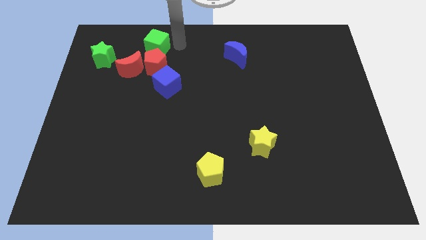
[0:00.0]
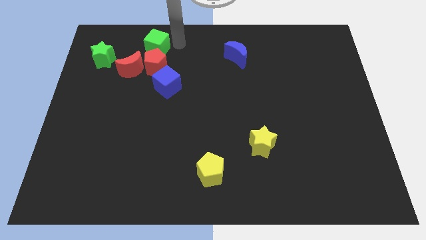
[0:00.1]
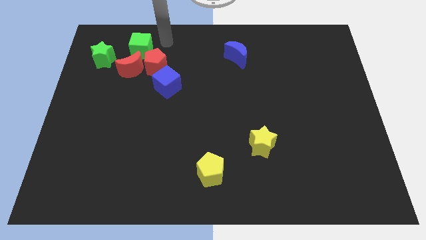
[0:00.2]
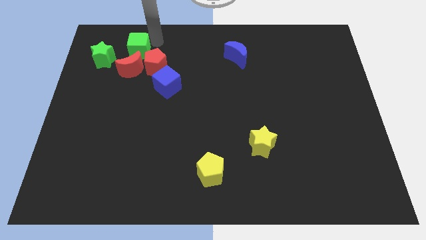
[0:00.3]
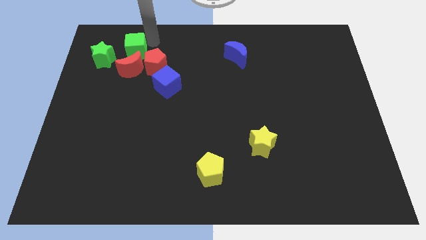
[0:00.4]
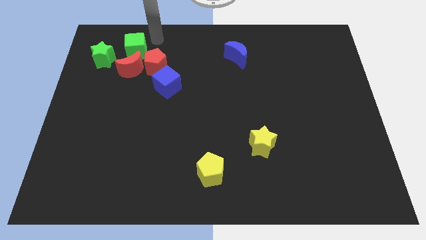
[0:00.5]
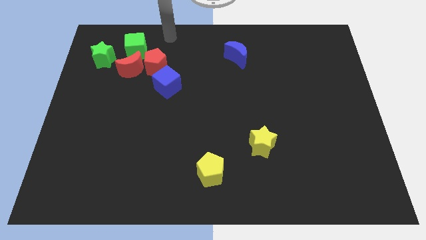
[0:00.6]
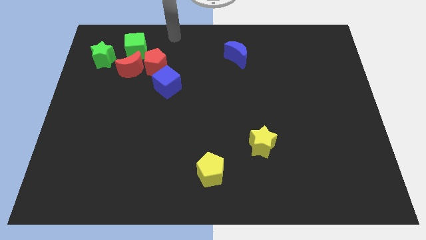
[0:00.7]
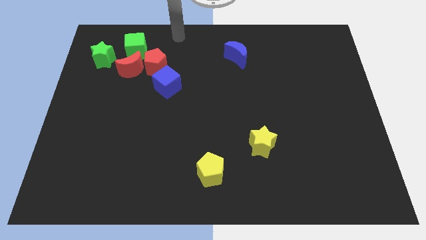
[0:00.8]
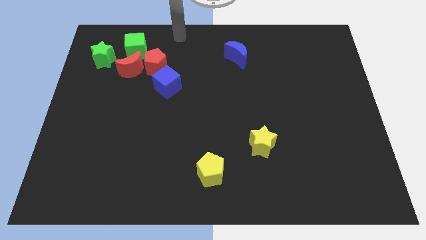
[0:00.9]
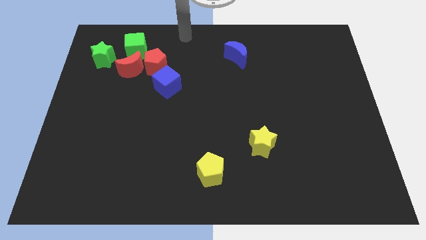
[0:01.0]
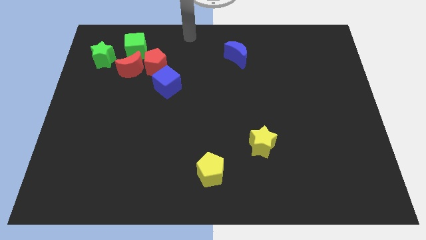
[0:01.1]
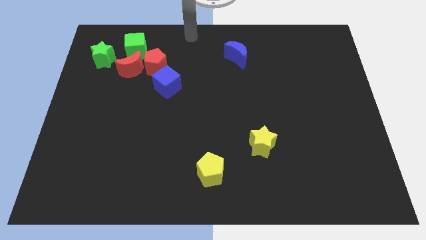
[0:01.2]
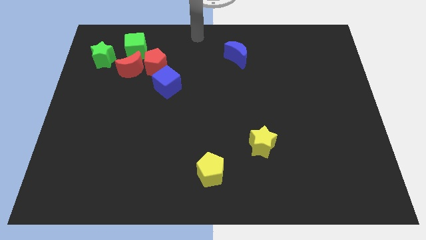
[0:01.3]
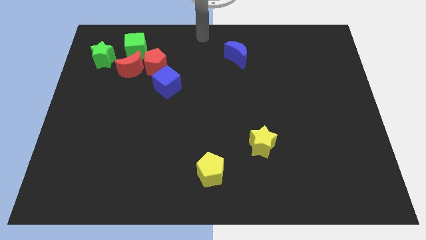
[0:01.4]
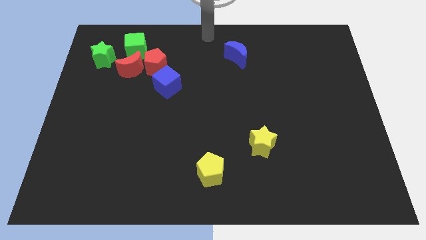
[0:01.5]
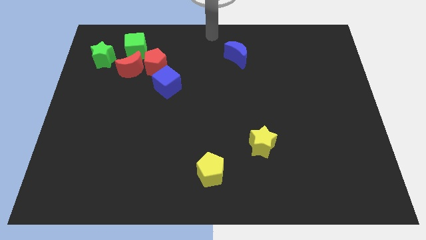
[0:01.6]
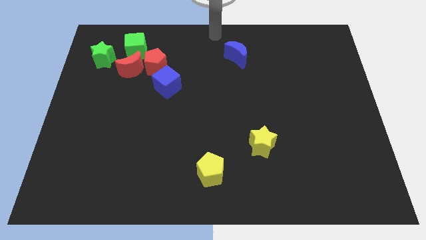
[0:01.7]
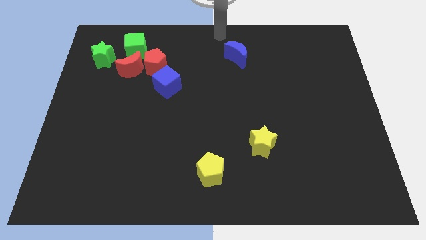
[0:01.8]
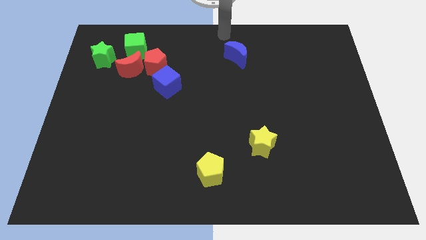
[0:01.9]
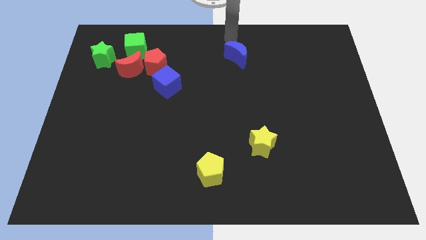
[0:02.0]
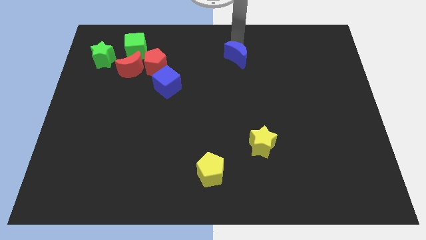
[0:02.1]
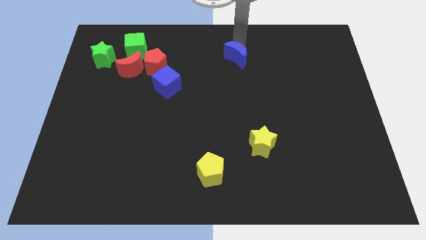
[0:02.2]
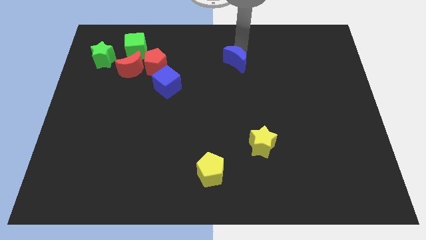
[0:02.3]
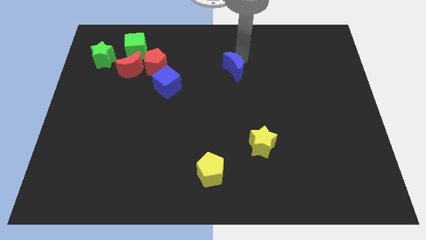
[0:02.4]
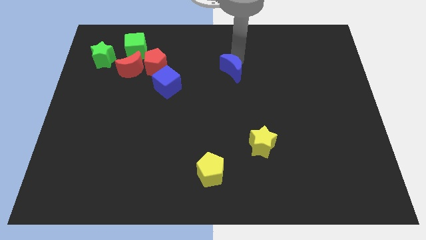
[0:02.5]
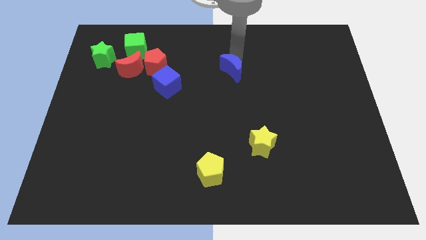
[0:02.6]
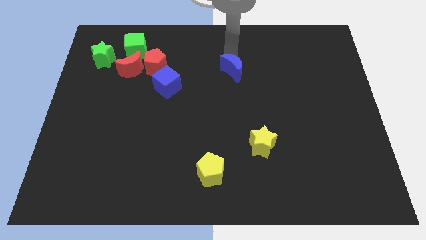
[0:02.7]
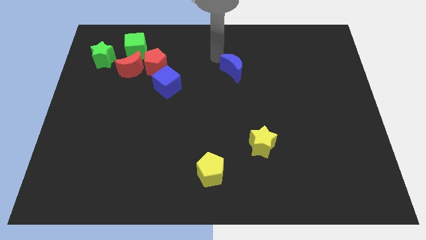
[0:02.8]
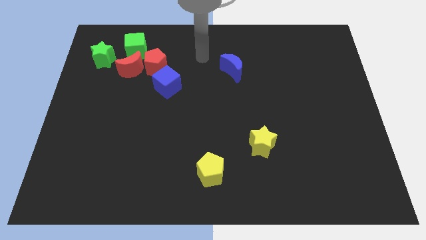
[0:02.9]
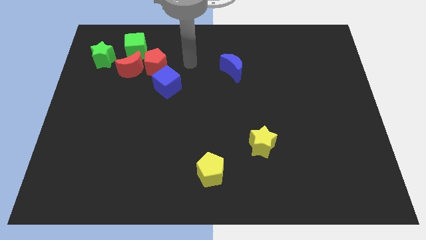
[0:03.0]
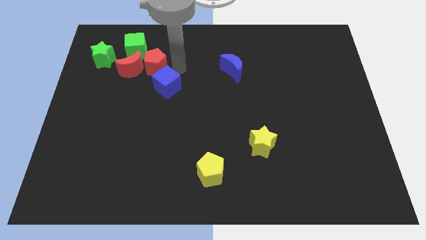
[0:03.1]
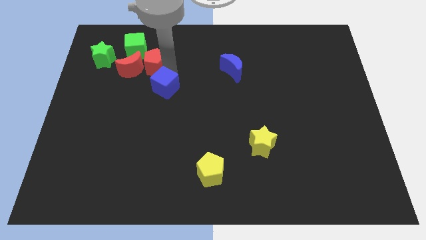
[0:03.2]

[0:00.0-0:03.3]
drag the blue moon diagonally top left to the yellow star

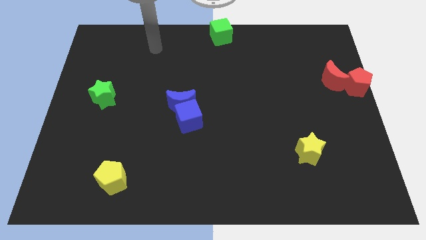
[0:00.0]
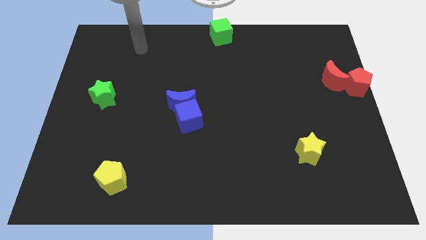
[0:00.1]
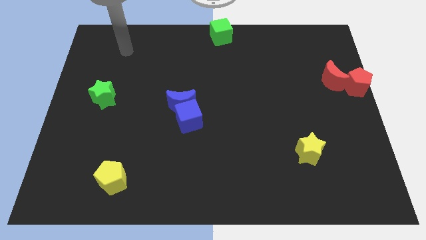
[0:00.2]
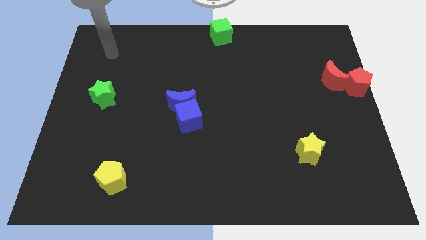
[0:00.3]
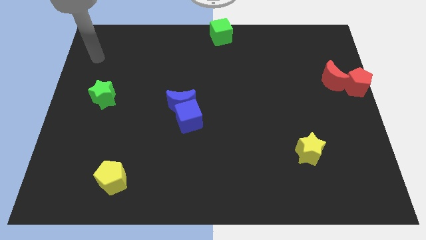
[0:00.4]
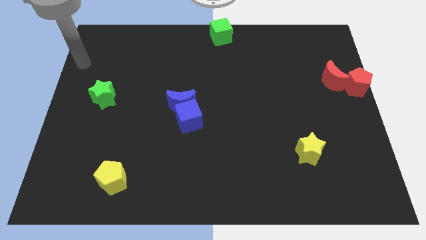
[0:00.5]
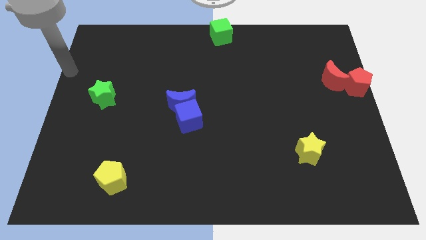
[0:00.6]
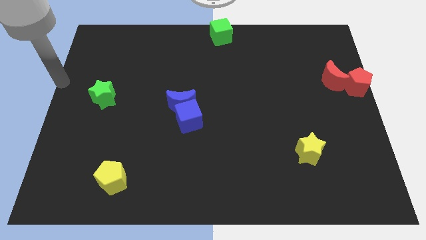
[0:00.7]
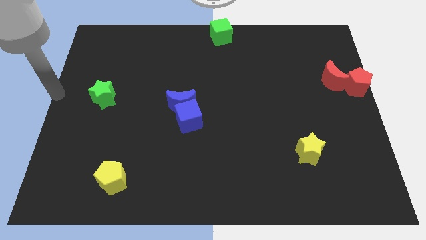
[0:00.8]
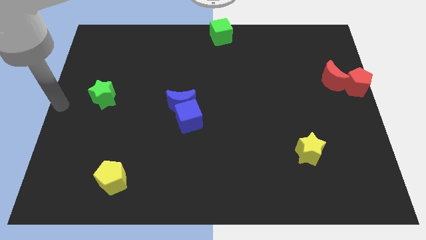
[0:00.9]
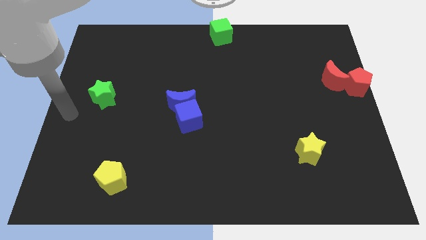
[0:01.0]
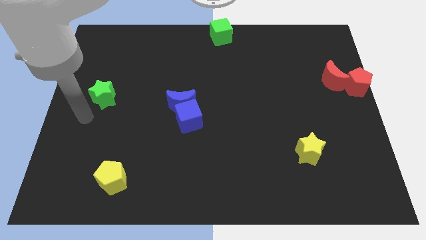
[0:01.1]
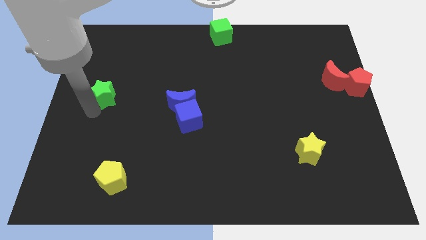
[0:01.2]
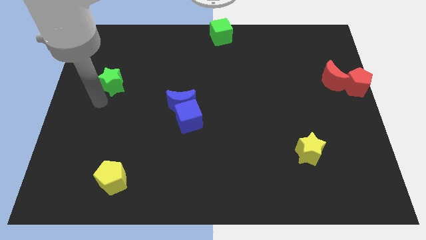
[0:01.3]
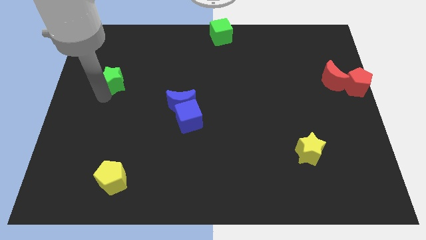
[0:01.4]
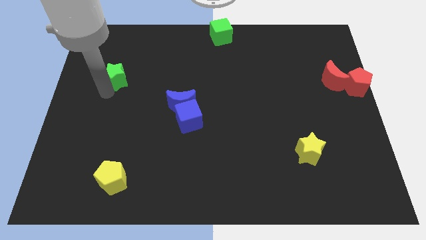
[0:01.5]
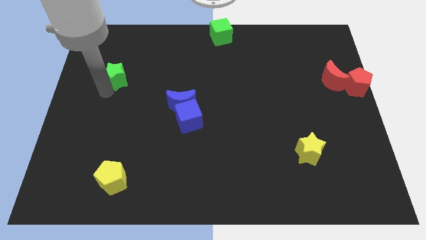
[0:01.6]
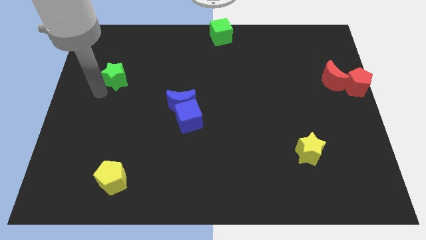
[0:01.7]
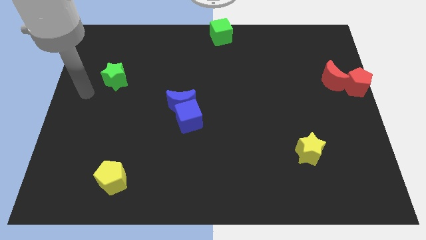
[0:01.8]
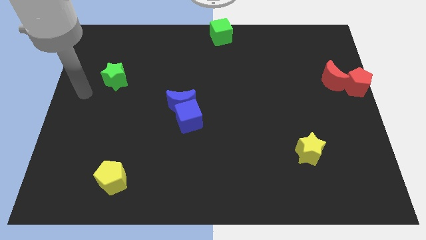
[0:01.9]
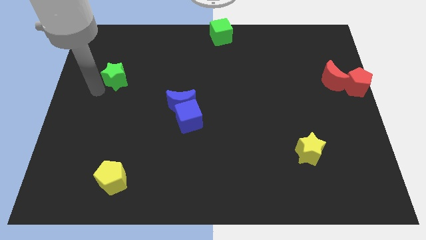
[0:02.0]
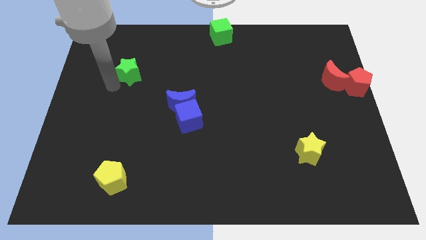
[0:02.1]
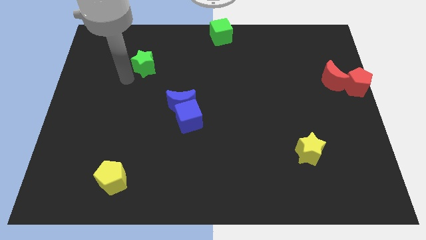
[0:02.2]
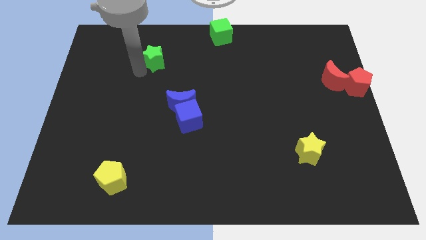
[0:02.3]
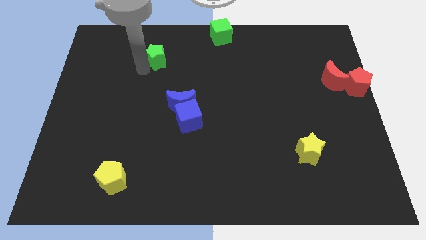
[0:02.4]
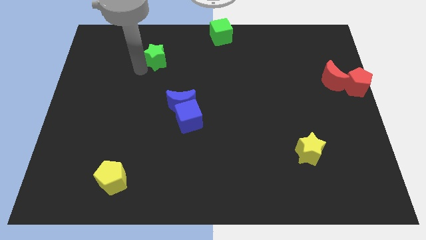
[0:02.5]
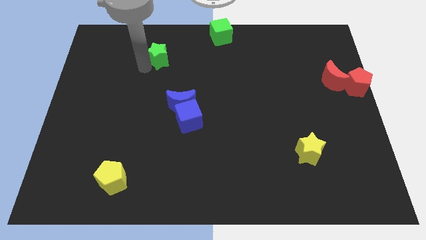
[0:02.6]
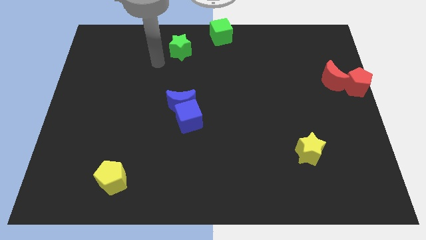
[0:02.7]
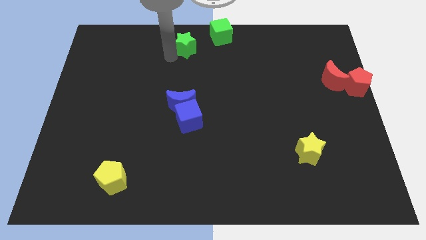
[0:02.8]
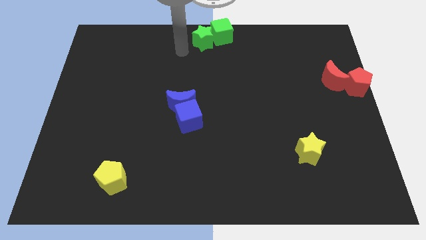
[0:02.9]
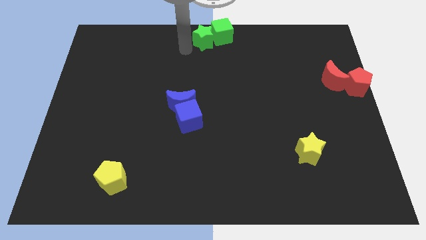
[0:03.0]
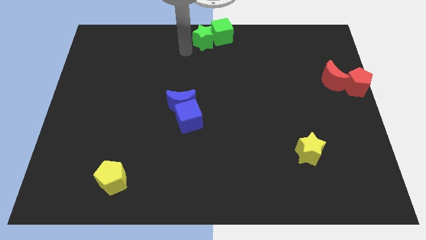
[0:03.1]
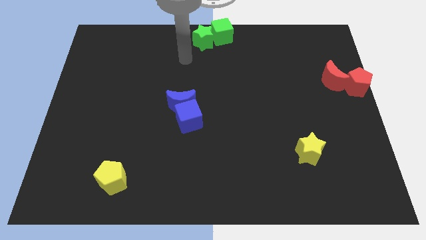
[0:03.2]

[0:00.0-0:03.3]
push the green star left to the green cube

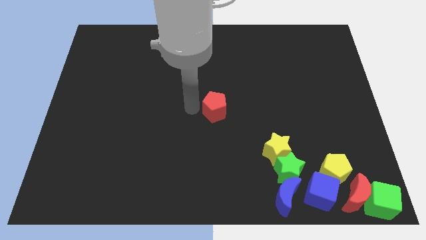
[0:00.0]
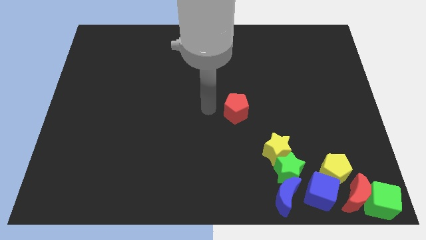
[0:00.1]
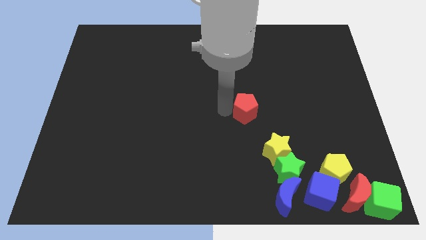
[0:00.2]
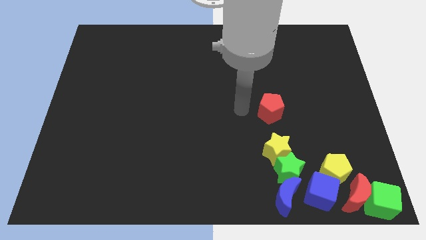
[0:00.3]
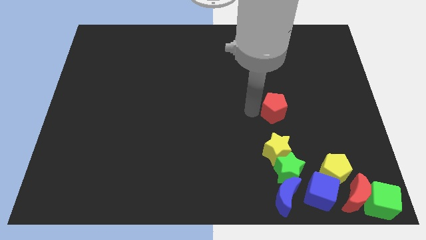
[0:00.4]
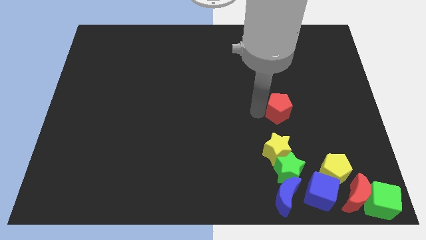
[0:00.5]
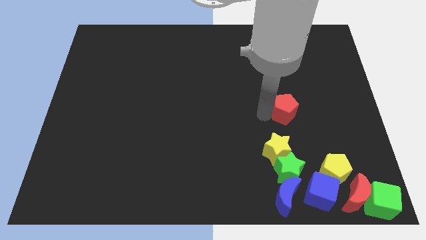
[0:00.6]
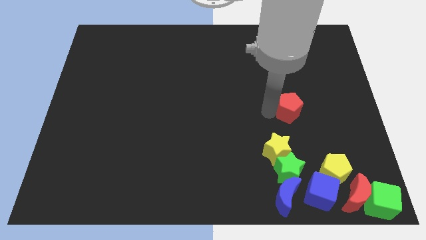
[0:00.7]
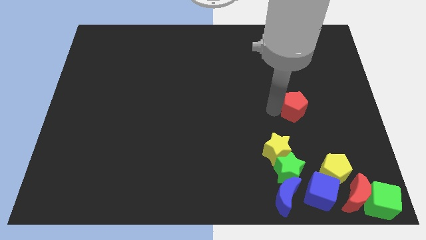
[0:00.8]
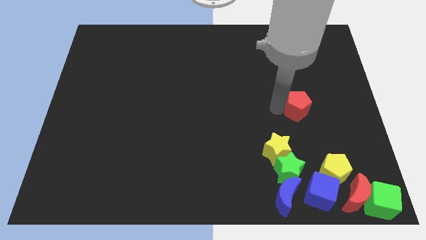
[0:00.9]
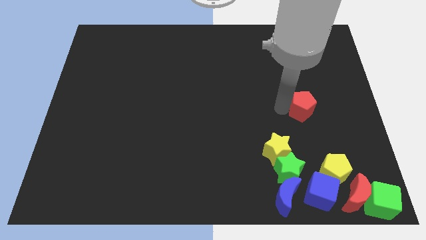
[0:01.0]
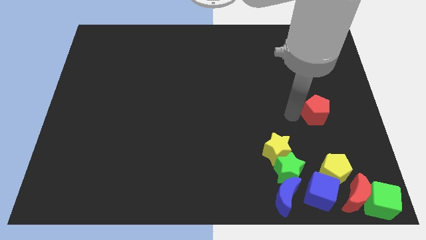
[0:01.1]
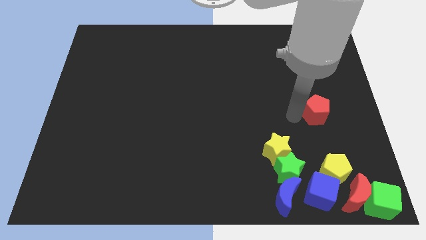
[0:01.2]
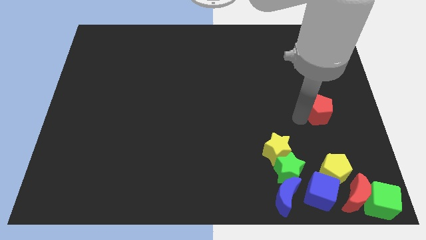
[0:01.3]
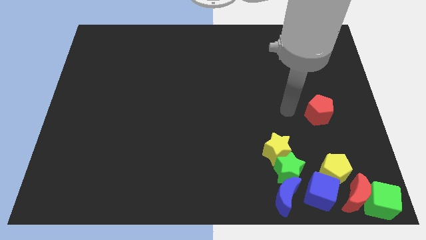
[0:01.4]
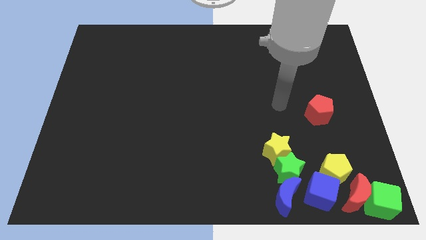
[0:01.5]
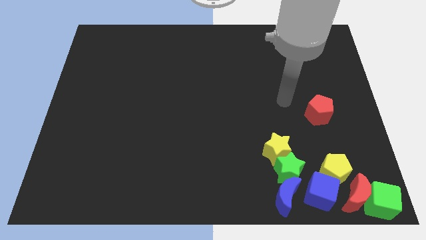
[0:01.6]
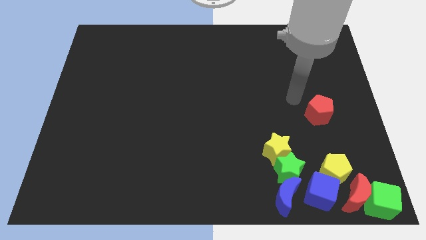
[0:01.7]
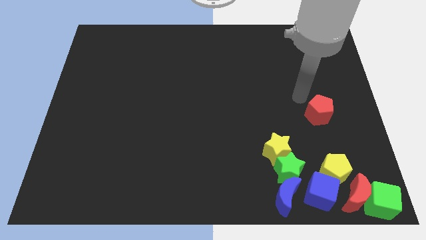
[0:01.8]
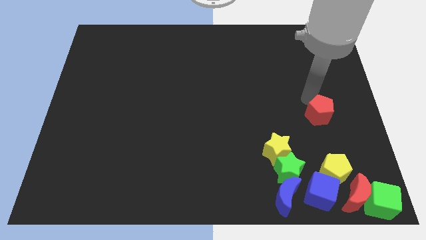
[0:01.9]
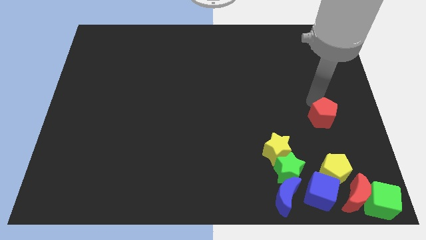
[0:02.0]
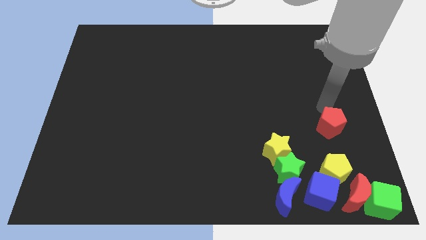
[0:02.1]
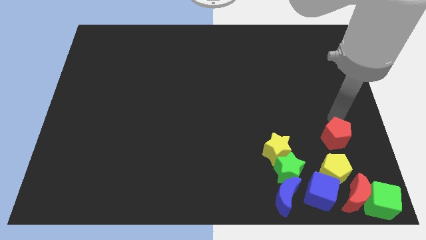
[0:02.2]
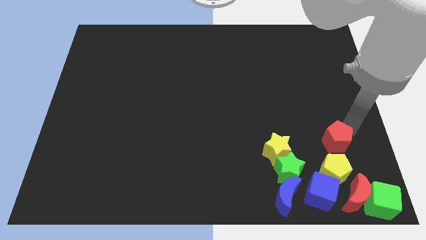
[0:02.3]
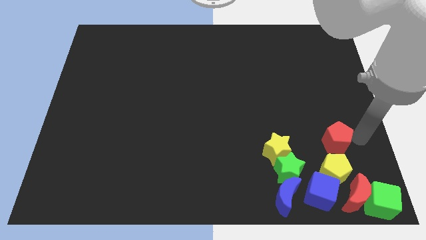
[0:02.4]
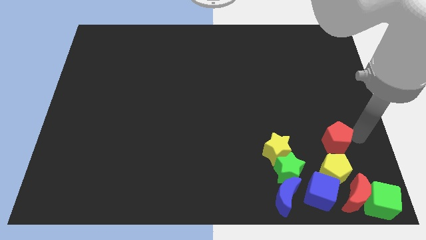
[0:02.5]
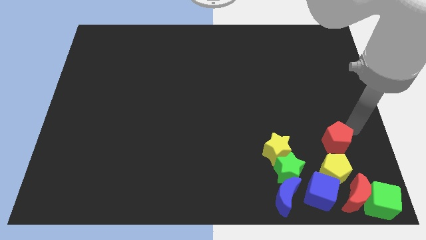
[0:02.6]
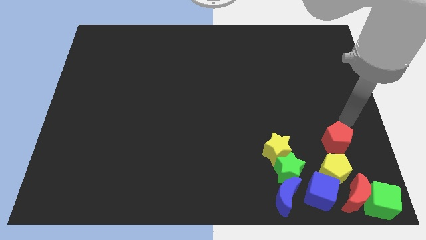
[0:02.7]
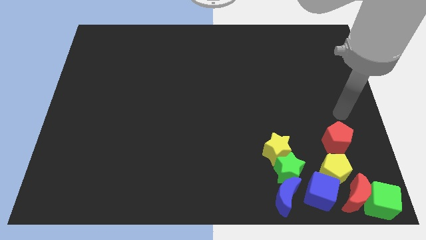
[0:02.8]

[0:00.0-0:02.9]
place the red pentagon above the yellow pentagon
